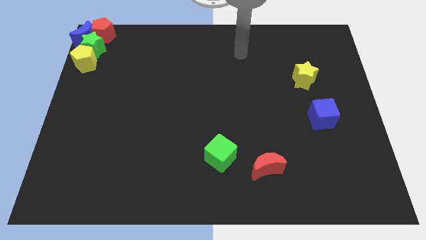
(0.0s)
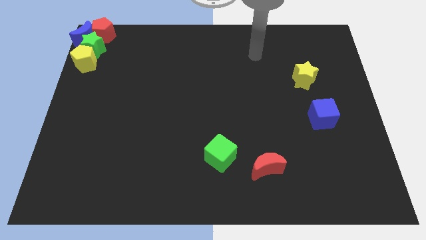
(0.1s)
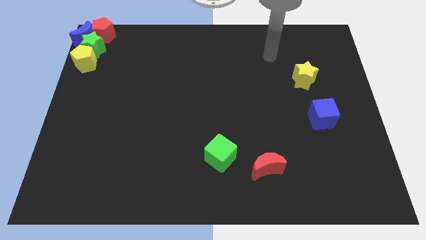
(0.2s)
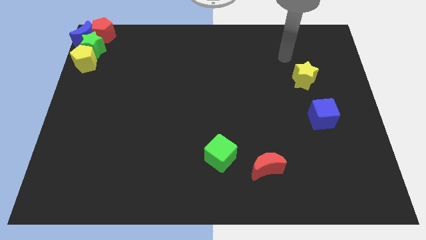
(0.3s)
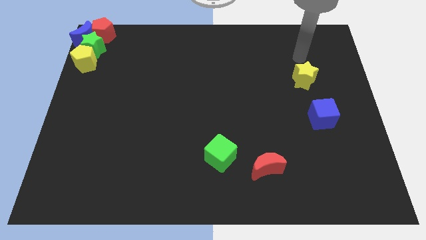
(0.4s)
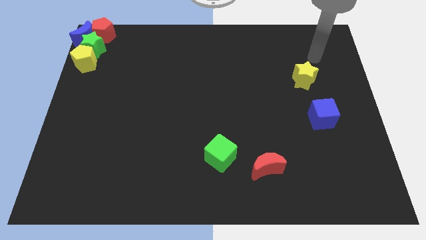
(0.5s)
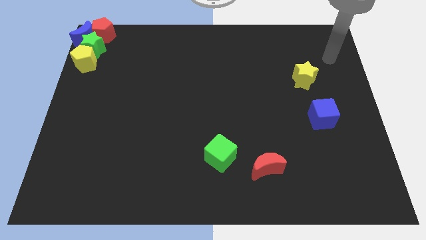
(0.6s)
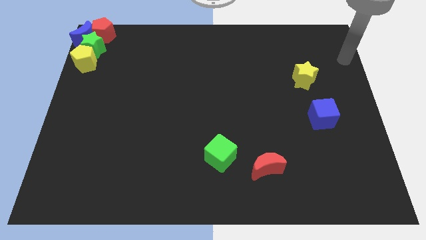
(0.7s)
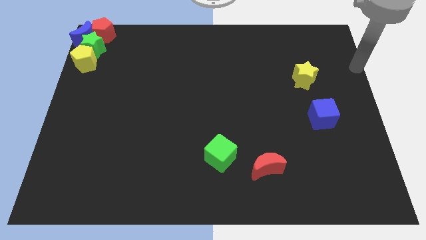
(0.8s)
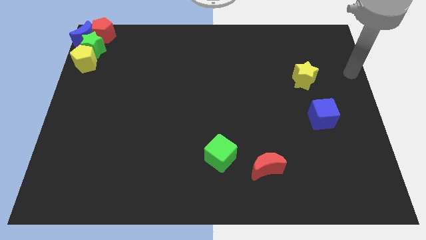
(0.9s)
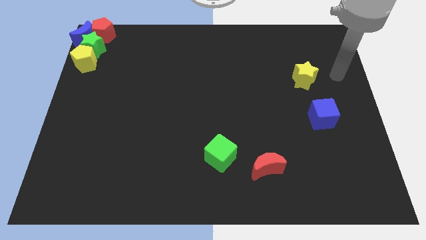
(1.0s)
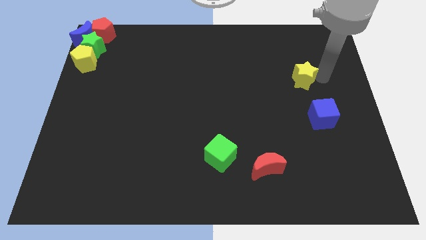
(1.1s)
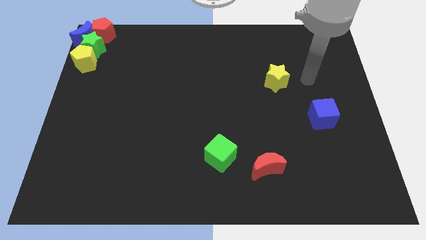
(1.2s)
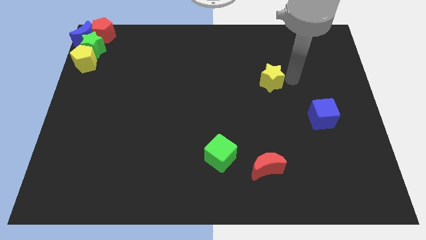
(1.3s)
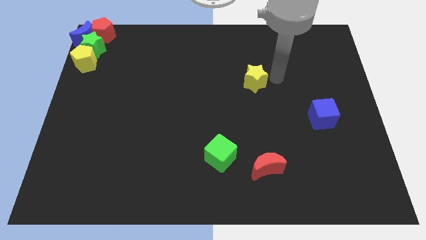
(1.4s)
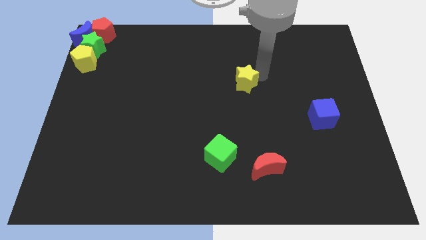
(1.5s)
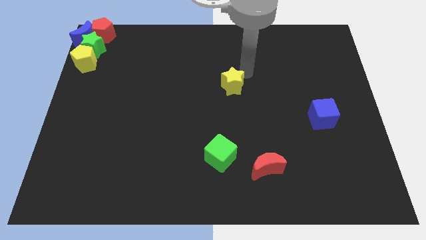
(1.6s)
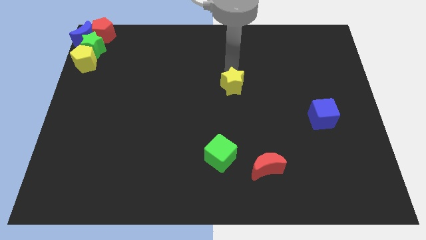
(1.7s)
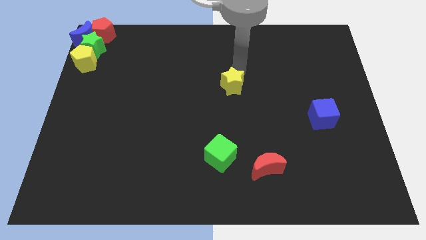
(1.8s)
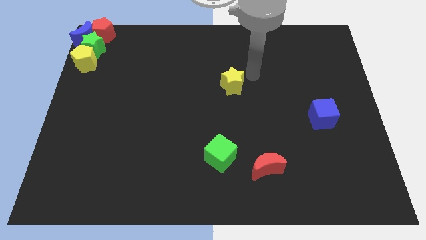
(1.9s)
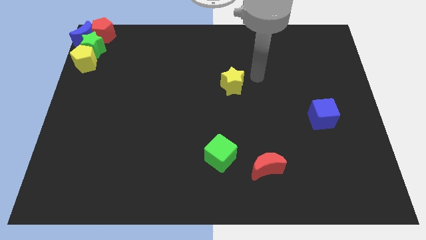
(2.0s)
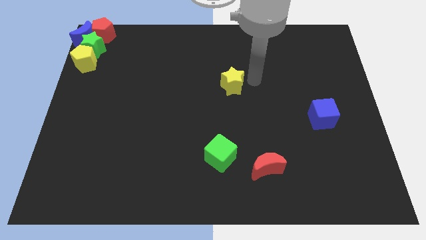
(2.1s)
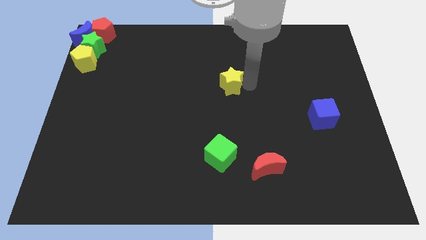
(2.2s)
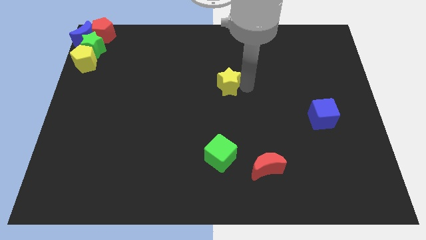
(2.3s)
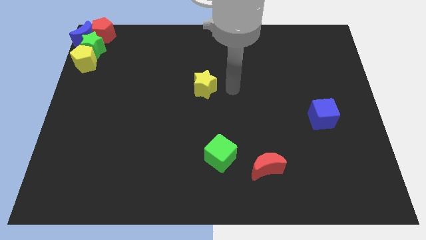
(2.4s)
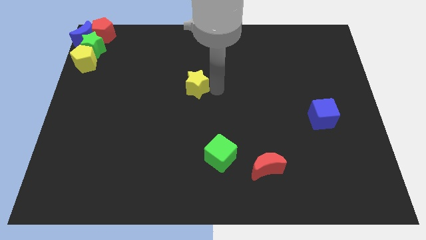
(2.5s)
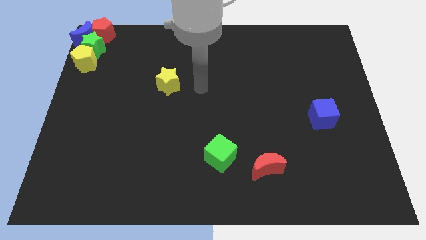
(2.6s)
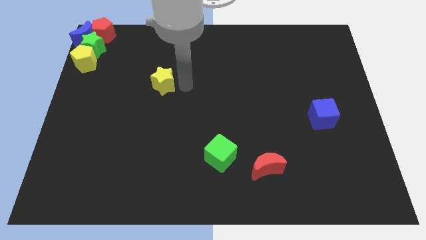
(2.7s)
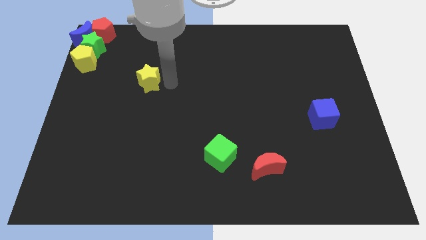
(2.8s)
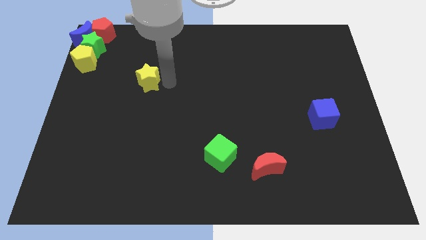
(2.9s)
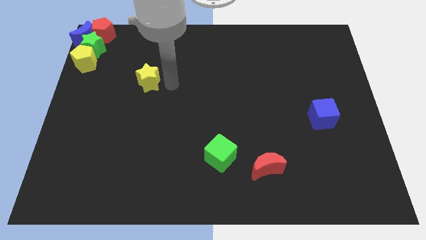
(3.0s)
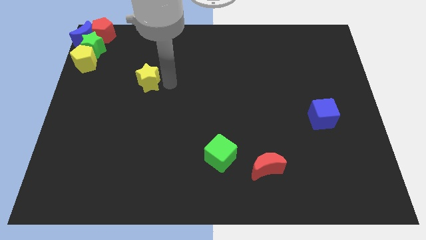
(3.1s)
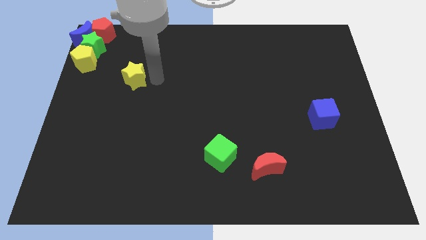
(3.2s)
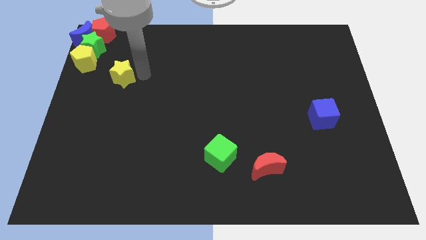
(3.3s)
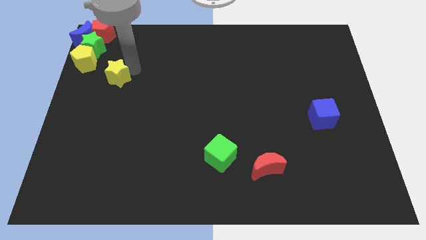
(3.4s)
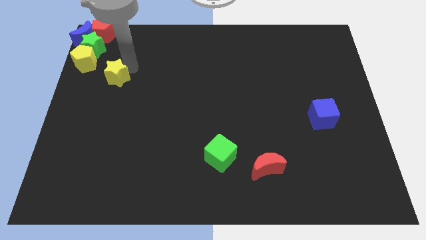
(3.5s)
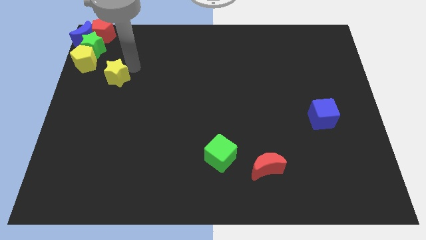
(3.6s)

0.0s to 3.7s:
place the green star to the bottom side of the yellow pentagon

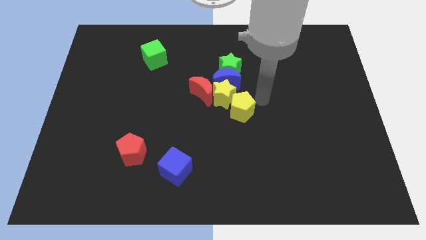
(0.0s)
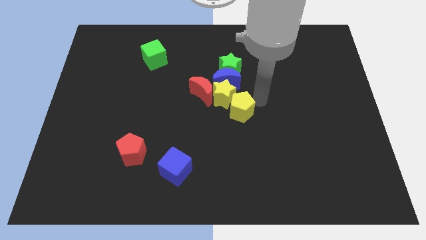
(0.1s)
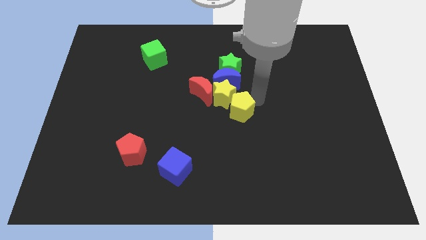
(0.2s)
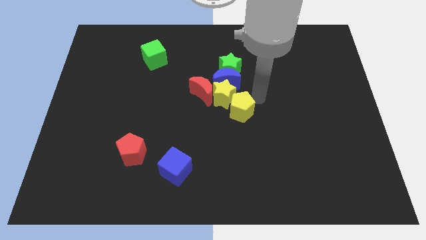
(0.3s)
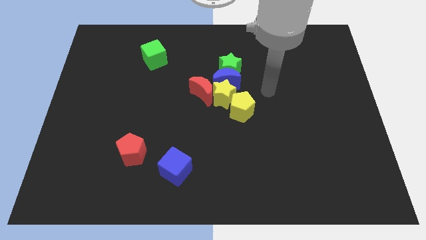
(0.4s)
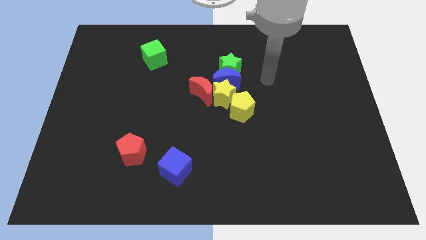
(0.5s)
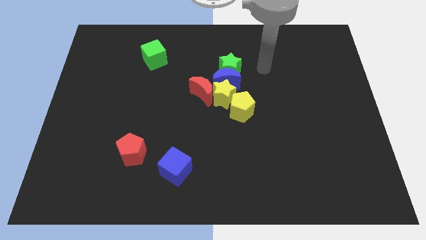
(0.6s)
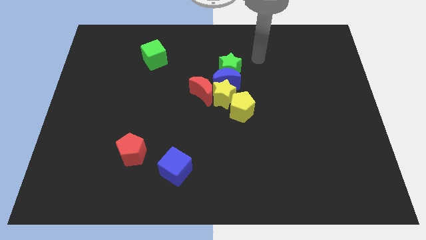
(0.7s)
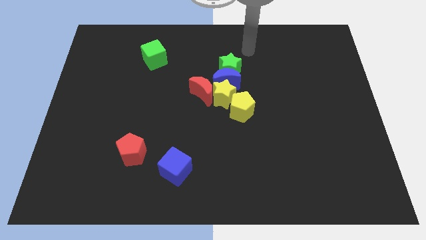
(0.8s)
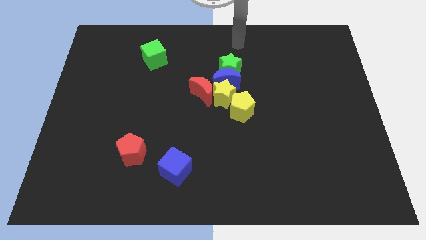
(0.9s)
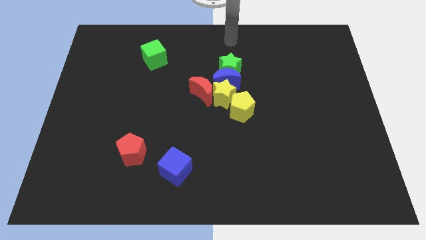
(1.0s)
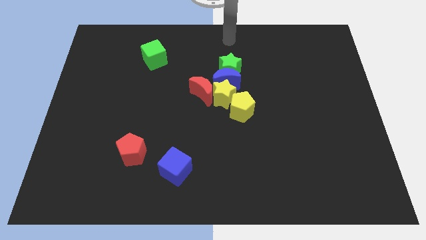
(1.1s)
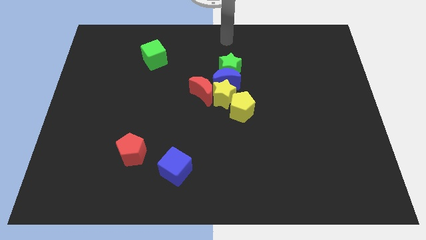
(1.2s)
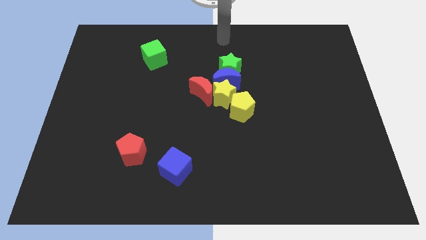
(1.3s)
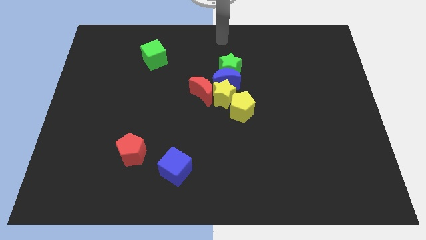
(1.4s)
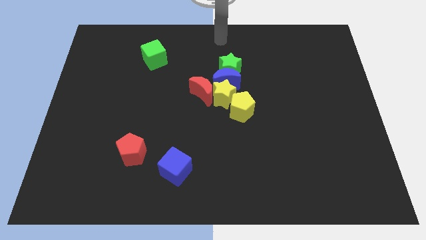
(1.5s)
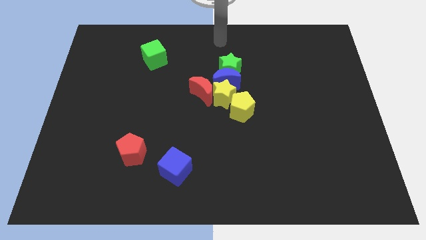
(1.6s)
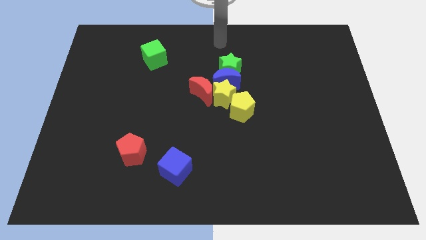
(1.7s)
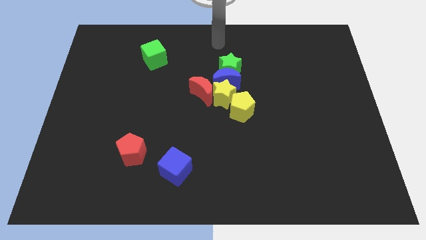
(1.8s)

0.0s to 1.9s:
move your to the top of the green star

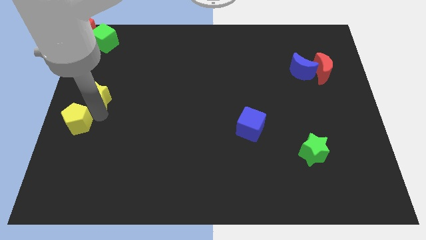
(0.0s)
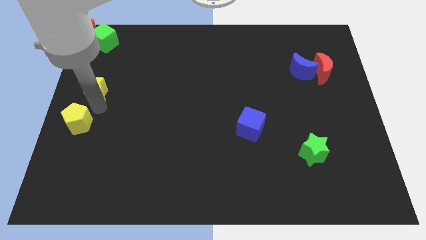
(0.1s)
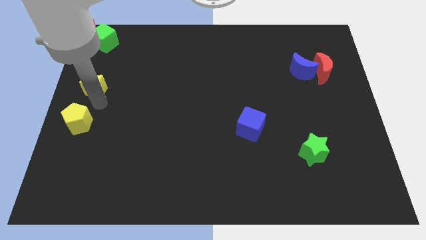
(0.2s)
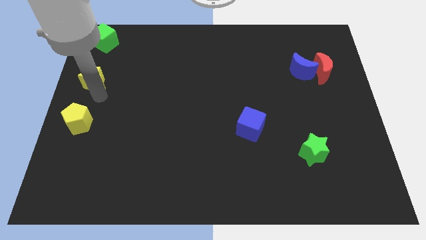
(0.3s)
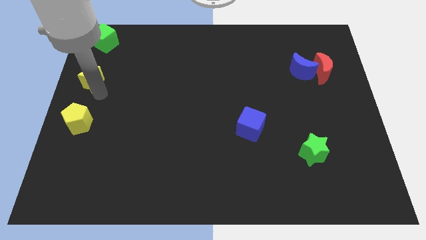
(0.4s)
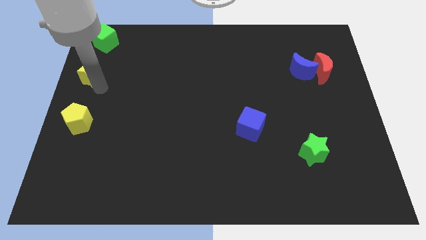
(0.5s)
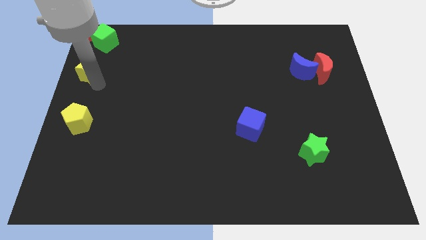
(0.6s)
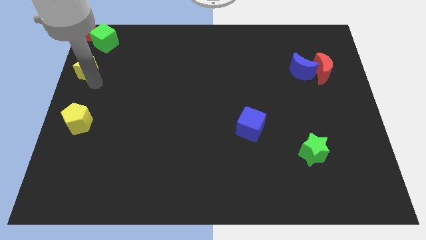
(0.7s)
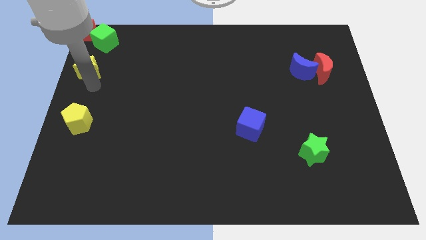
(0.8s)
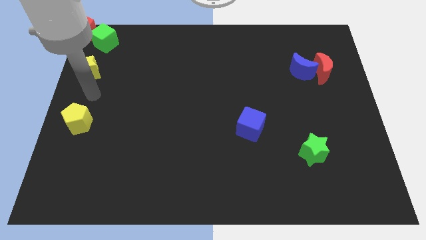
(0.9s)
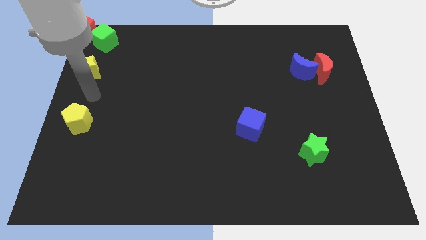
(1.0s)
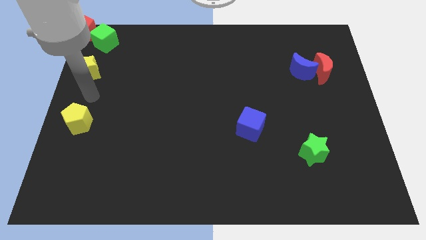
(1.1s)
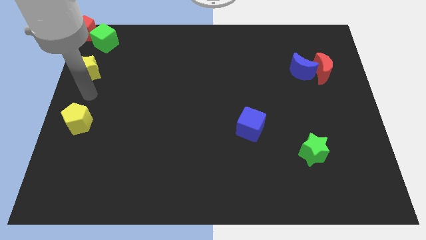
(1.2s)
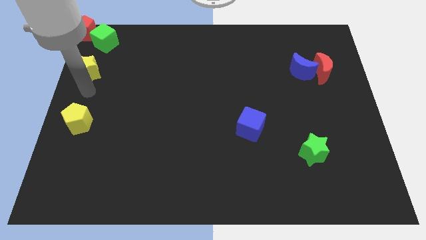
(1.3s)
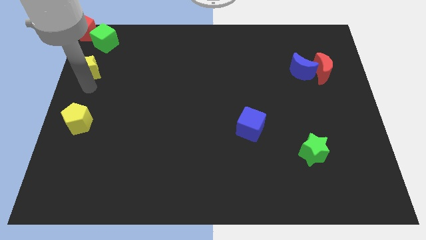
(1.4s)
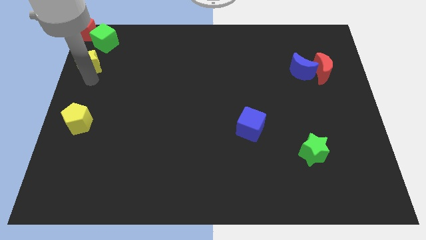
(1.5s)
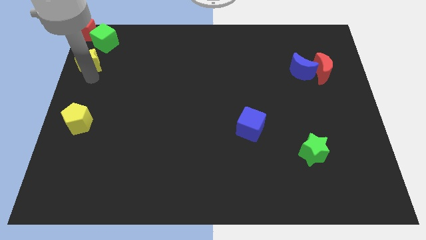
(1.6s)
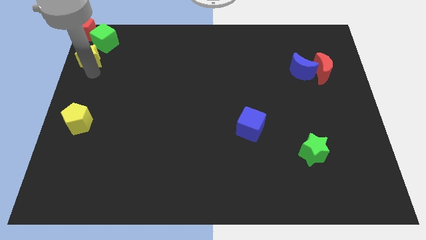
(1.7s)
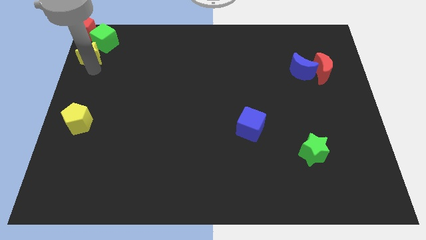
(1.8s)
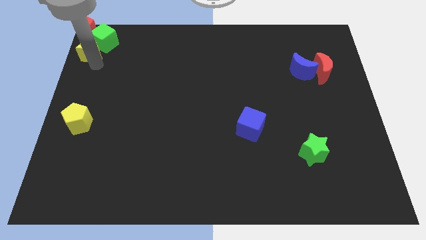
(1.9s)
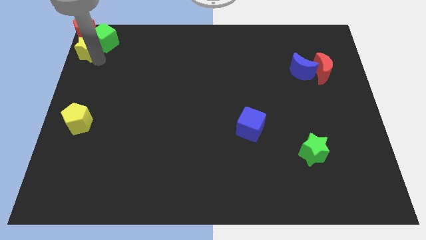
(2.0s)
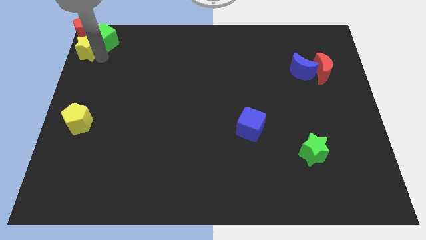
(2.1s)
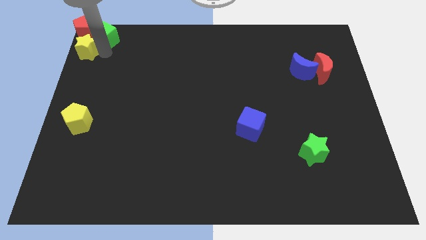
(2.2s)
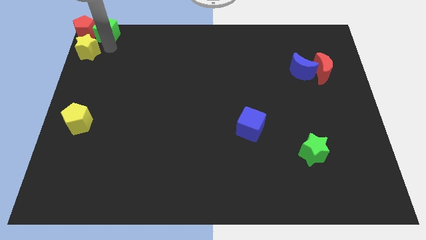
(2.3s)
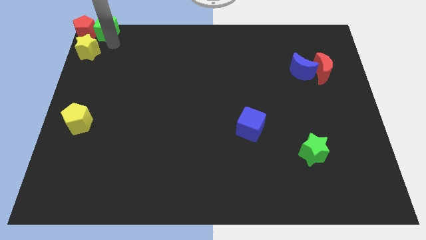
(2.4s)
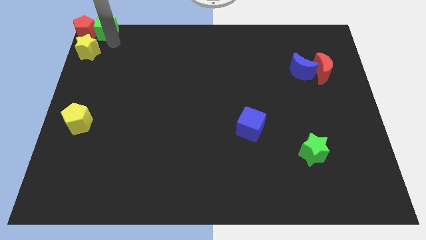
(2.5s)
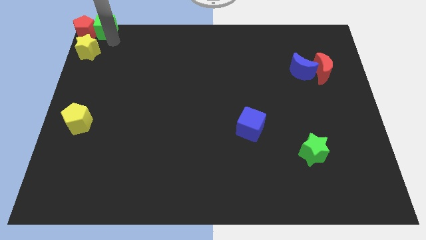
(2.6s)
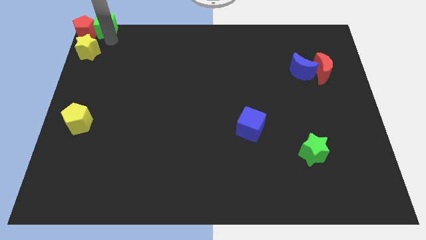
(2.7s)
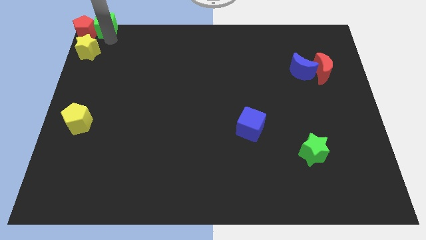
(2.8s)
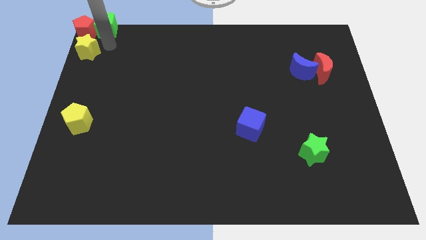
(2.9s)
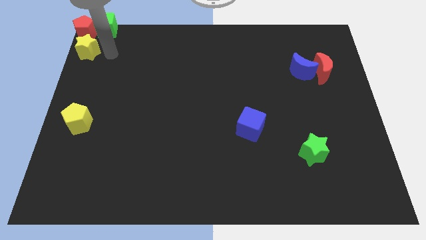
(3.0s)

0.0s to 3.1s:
place yellow star below red pentagon

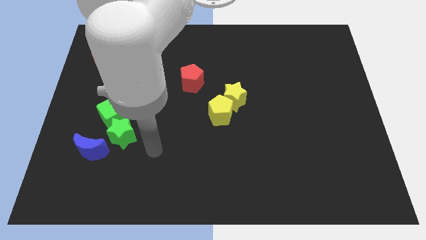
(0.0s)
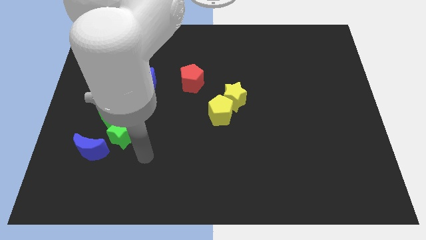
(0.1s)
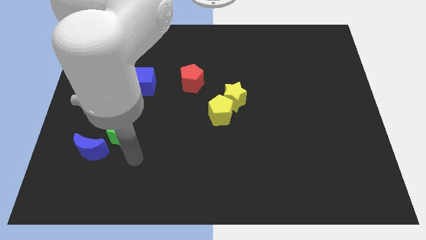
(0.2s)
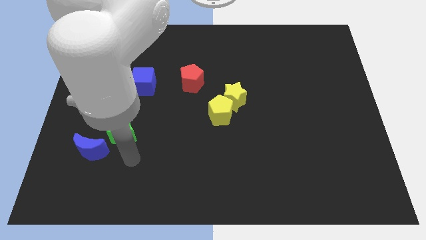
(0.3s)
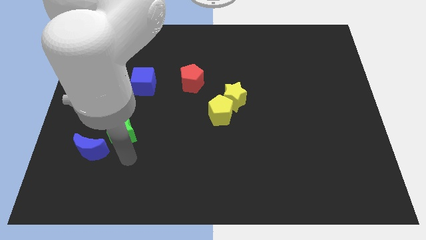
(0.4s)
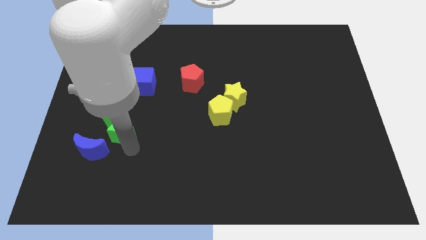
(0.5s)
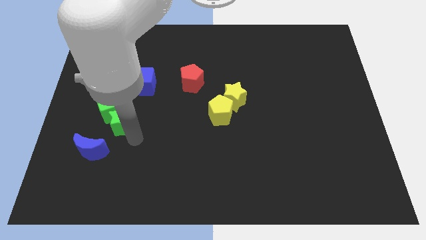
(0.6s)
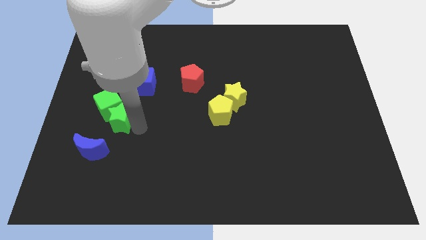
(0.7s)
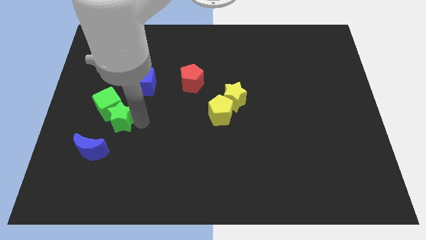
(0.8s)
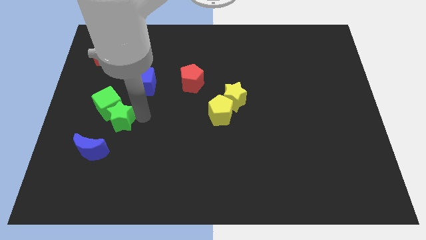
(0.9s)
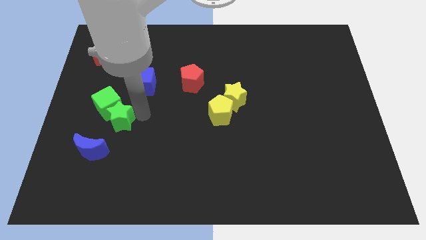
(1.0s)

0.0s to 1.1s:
touch the bottom of green star
